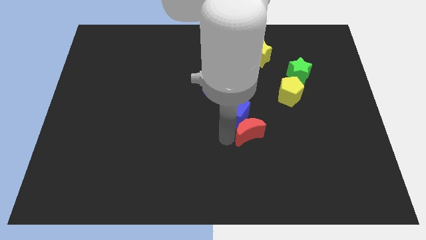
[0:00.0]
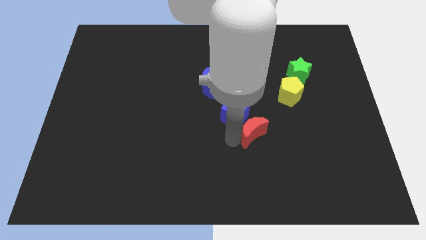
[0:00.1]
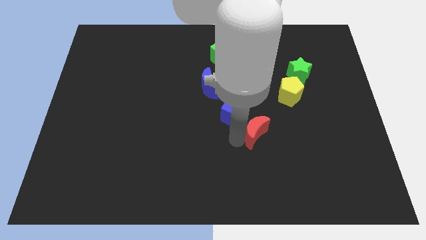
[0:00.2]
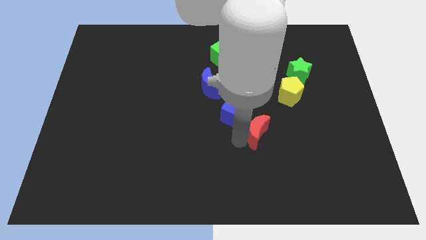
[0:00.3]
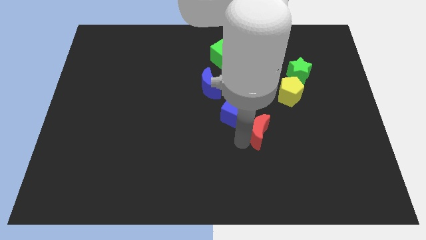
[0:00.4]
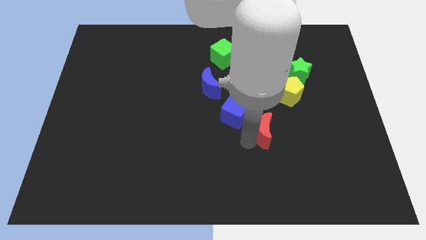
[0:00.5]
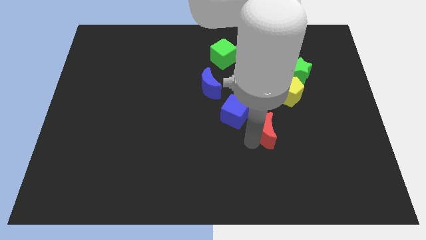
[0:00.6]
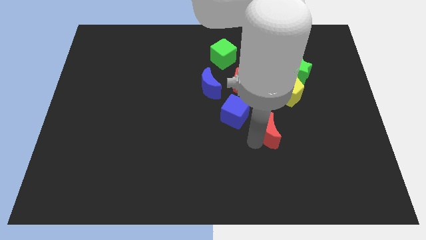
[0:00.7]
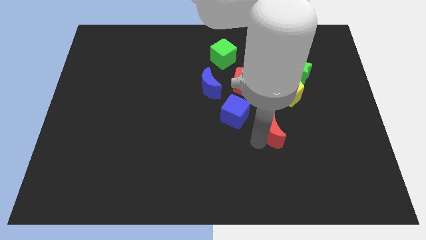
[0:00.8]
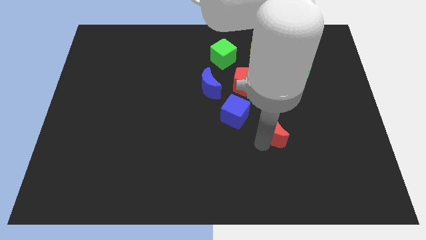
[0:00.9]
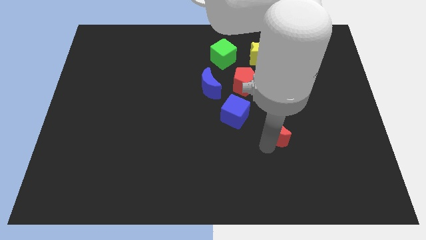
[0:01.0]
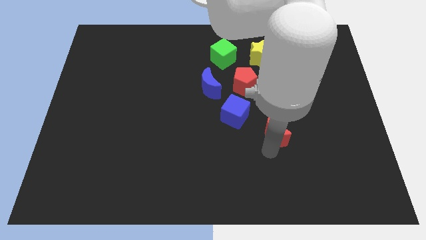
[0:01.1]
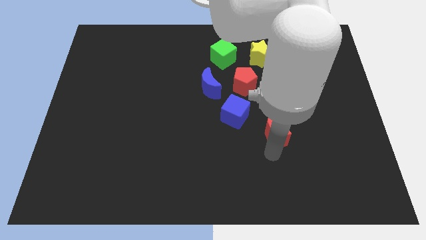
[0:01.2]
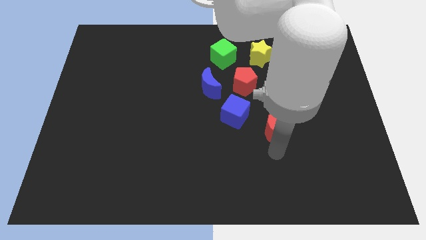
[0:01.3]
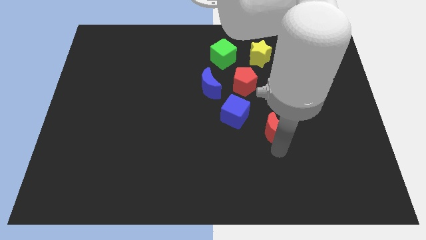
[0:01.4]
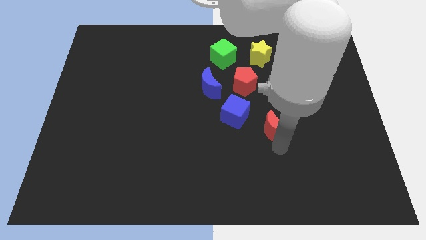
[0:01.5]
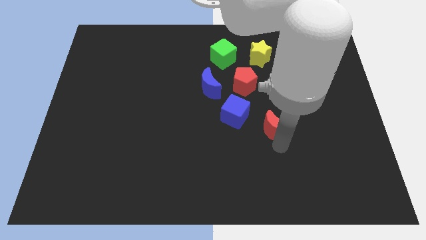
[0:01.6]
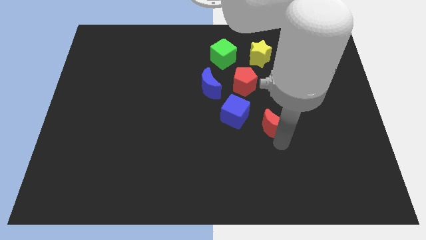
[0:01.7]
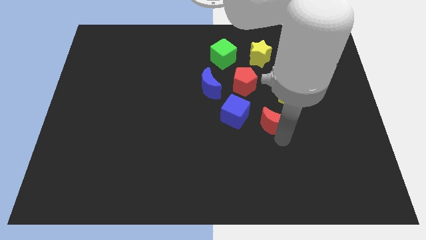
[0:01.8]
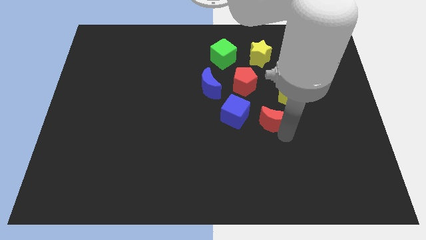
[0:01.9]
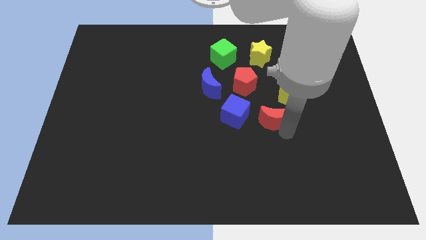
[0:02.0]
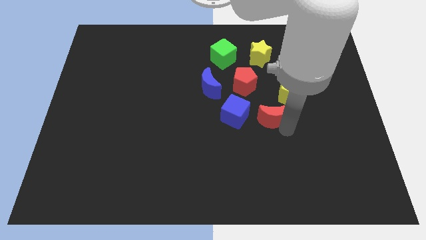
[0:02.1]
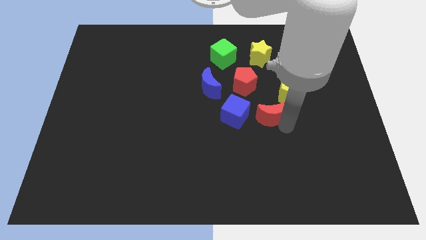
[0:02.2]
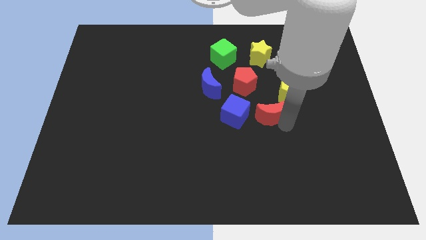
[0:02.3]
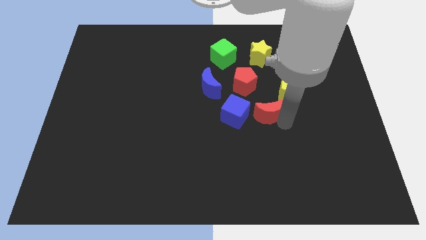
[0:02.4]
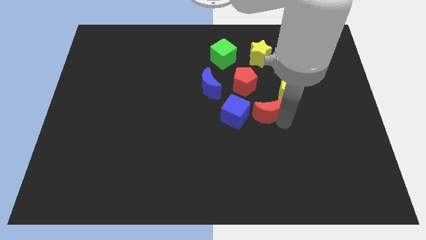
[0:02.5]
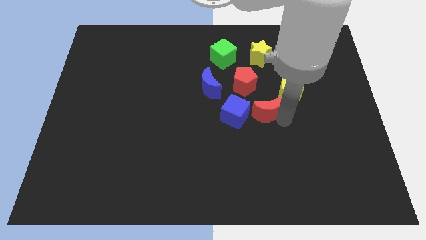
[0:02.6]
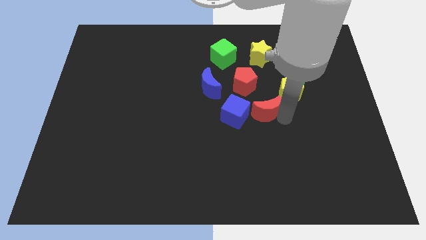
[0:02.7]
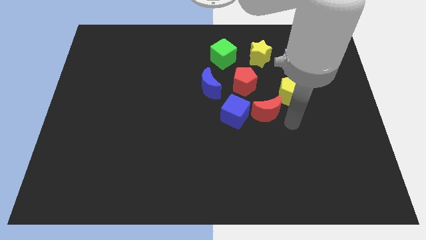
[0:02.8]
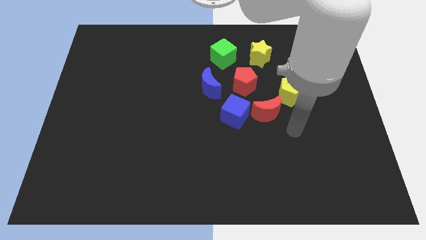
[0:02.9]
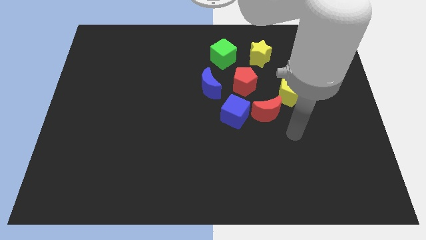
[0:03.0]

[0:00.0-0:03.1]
place the red moon to the left of yellow pentagon

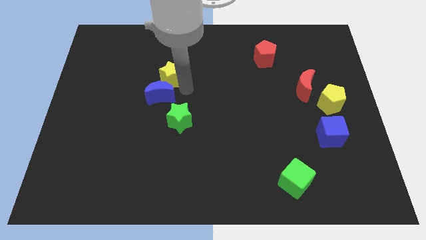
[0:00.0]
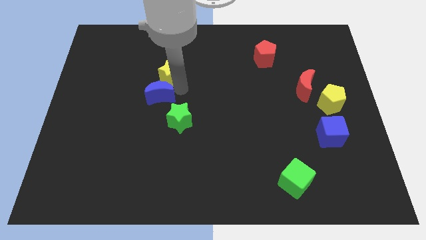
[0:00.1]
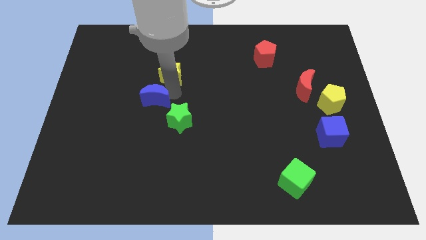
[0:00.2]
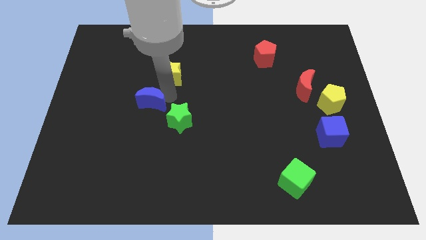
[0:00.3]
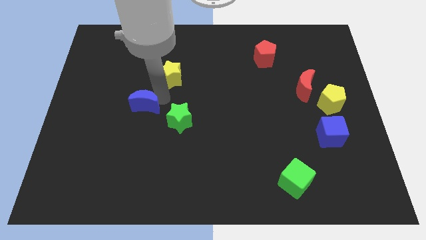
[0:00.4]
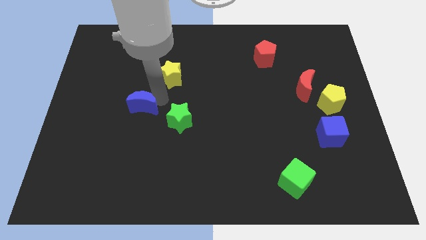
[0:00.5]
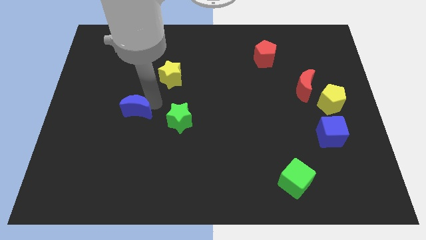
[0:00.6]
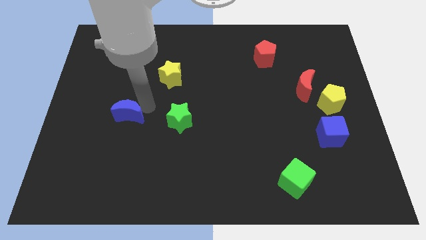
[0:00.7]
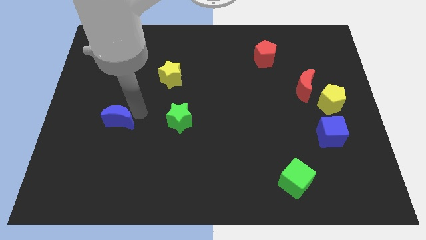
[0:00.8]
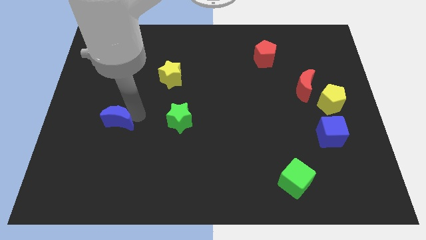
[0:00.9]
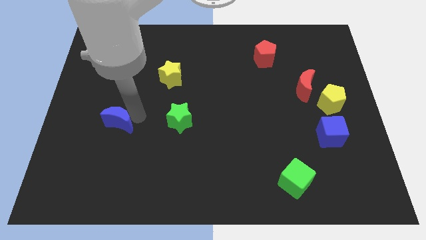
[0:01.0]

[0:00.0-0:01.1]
move the blue moon to the left side of the green star

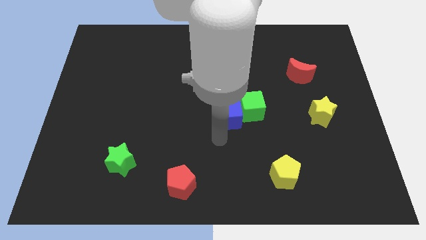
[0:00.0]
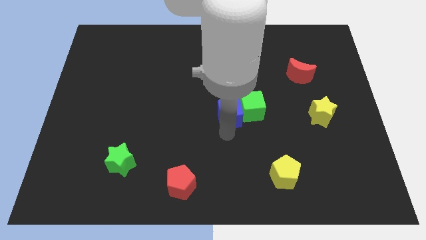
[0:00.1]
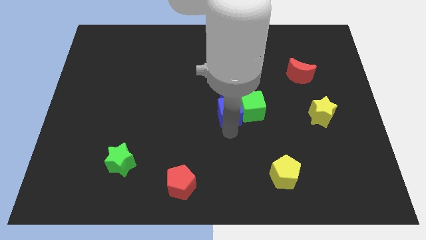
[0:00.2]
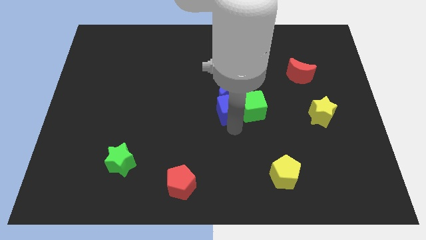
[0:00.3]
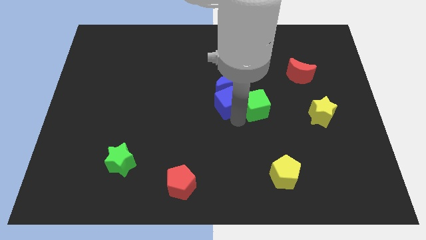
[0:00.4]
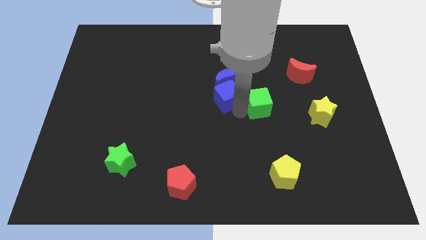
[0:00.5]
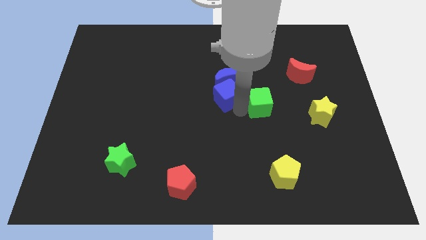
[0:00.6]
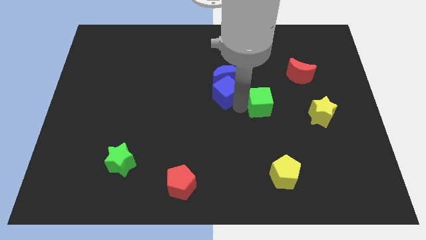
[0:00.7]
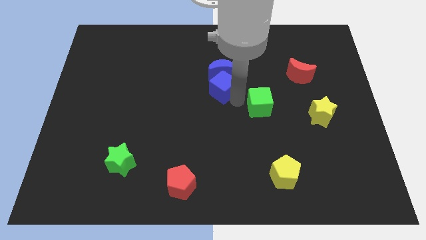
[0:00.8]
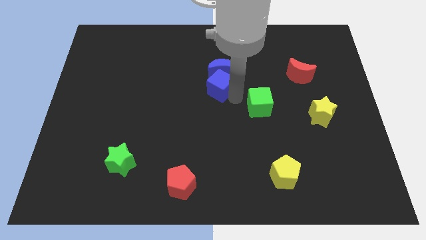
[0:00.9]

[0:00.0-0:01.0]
put the blue blocks together

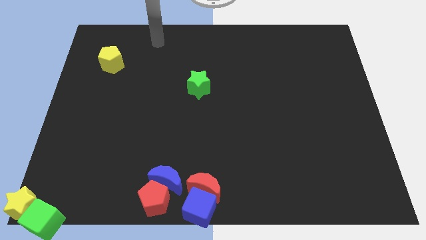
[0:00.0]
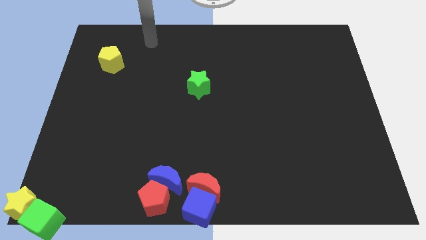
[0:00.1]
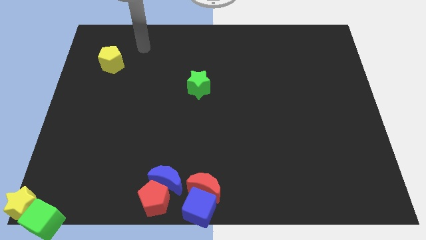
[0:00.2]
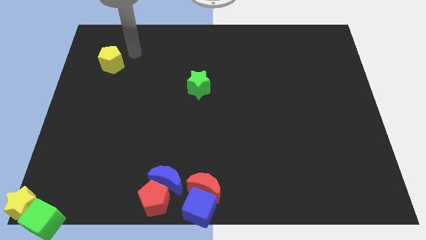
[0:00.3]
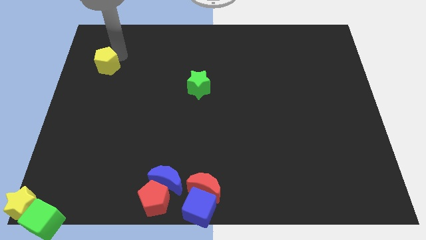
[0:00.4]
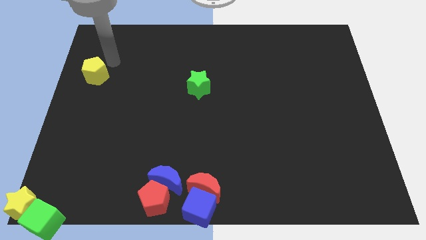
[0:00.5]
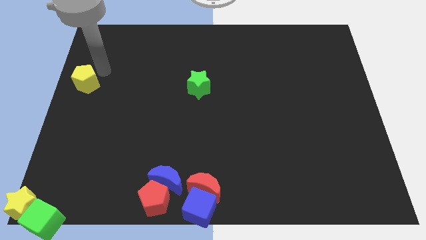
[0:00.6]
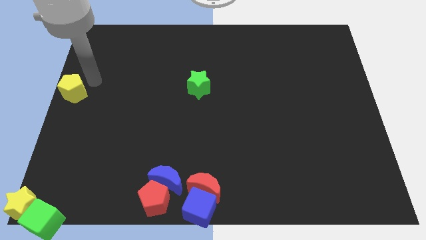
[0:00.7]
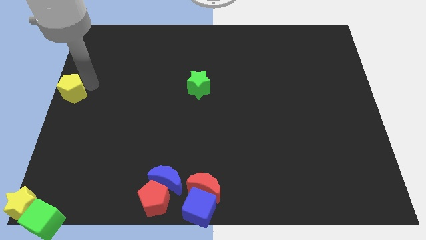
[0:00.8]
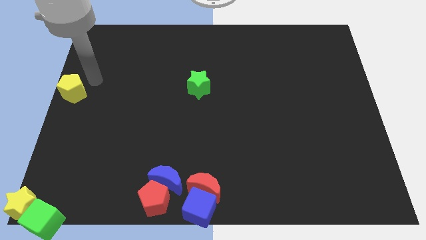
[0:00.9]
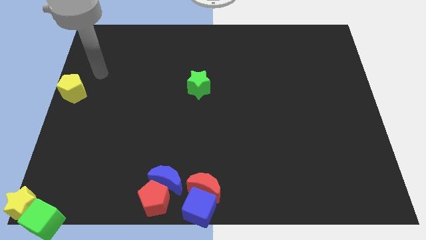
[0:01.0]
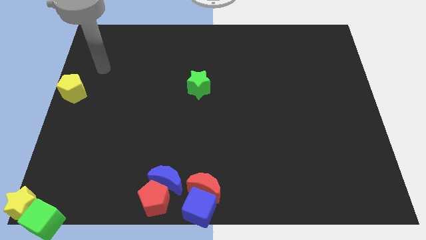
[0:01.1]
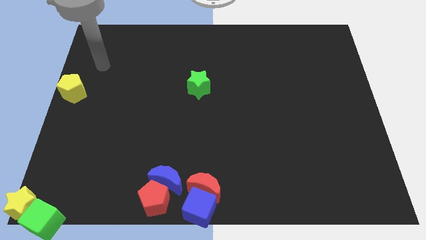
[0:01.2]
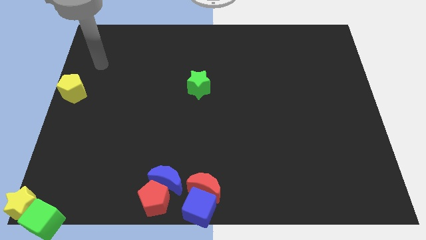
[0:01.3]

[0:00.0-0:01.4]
move the yellow pentagon to the centre left on the board

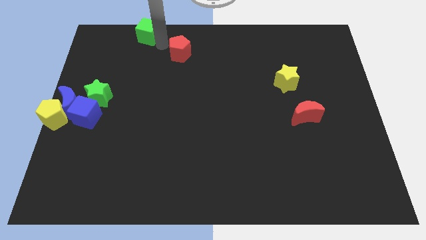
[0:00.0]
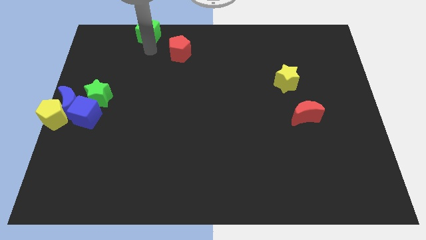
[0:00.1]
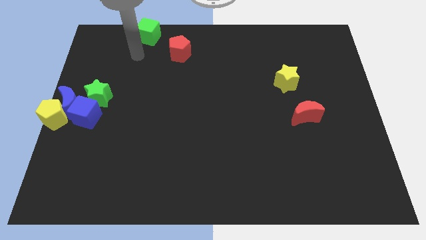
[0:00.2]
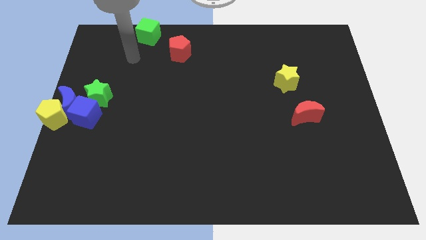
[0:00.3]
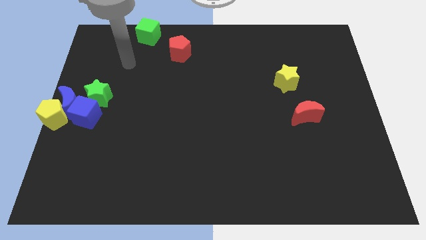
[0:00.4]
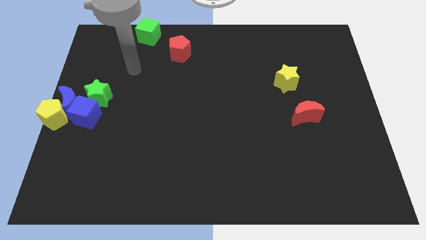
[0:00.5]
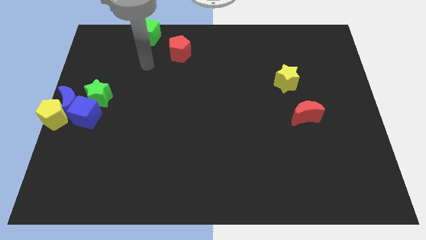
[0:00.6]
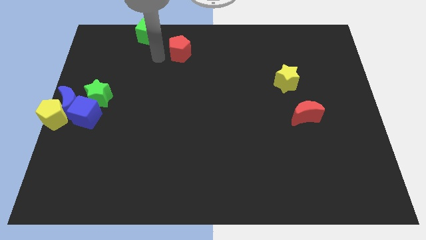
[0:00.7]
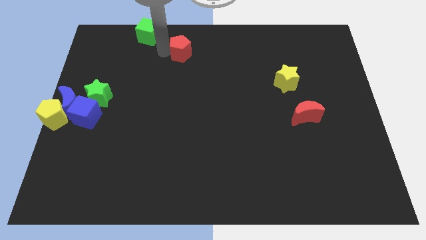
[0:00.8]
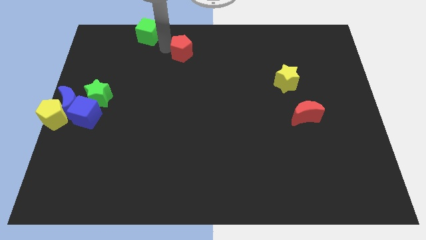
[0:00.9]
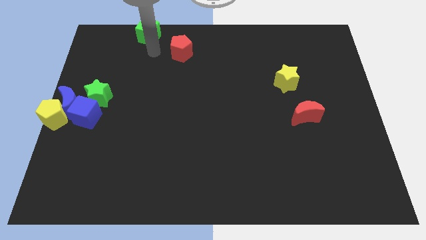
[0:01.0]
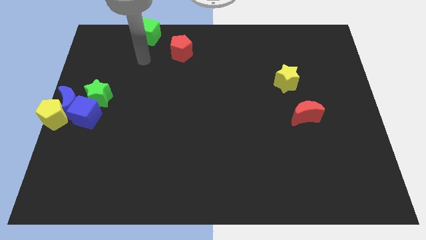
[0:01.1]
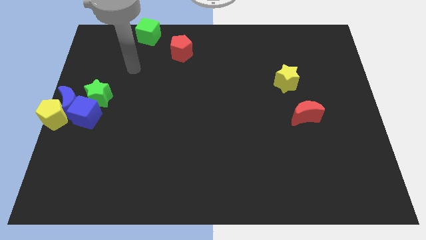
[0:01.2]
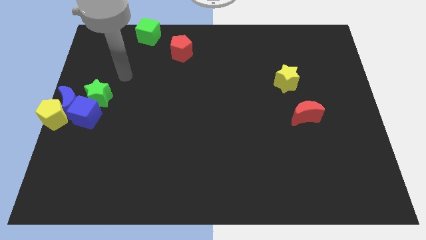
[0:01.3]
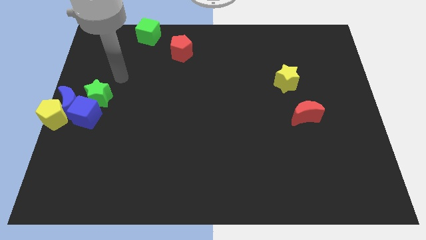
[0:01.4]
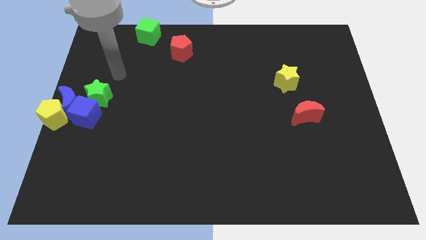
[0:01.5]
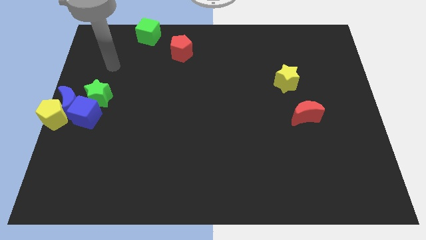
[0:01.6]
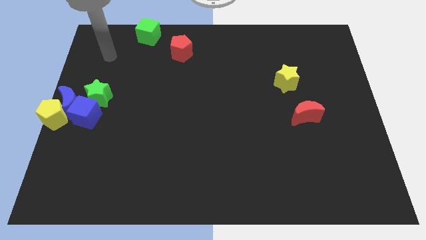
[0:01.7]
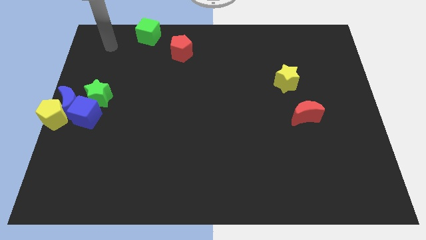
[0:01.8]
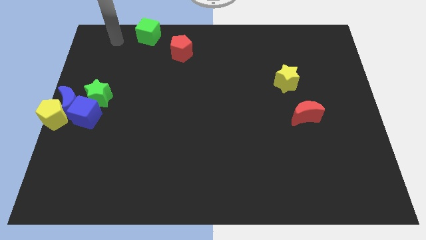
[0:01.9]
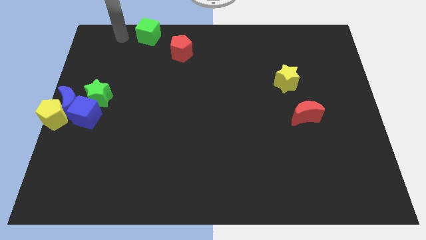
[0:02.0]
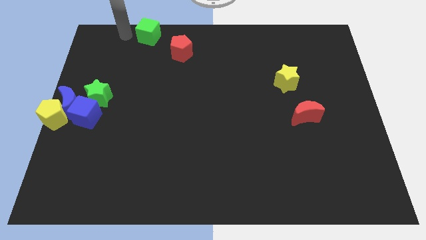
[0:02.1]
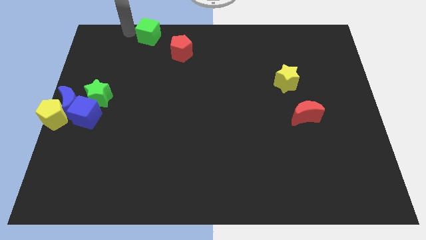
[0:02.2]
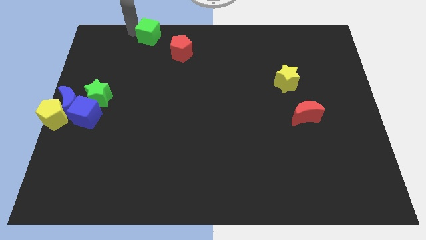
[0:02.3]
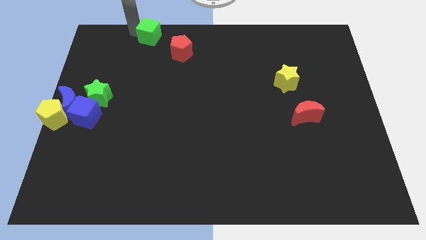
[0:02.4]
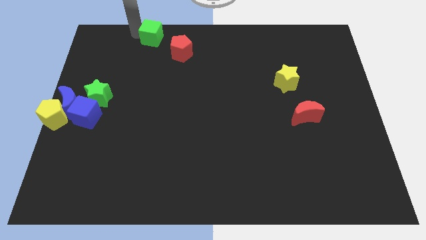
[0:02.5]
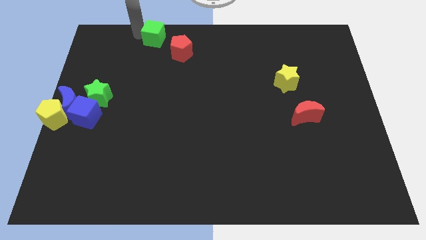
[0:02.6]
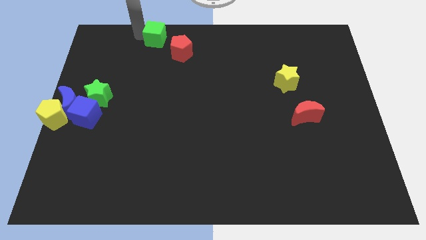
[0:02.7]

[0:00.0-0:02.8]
move your arm towards the green cube
